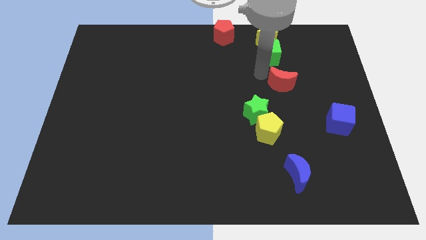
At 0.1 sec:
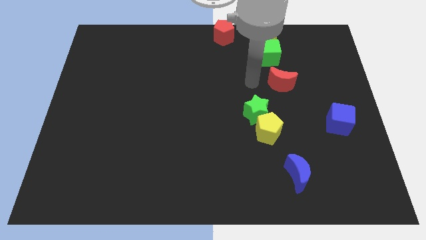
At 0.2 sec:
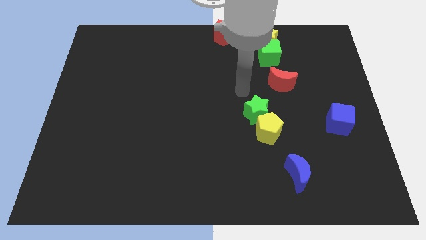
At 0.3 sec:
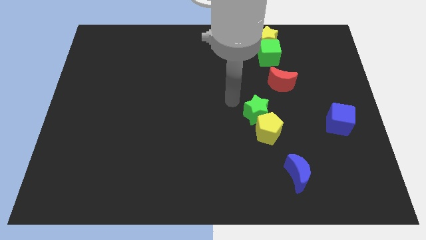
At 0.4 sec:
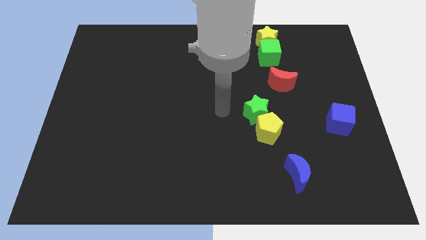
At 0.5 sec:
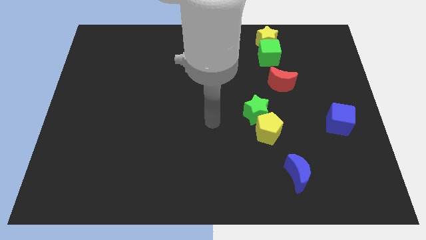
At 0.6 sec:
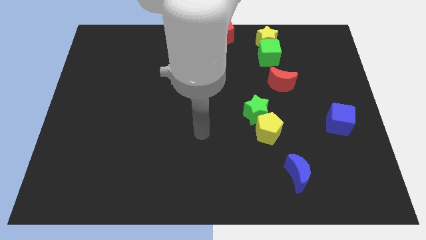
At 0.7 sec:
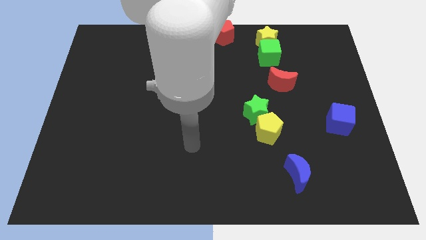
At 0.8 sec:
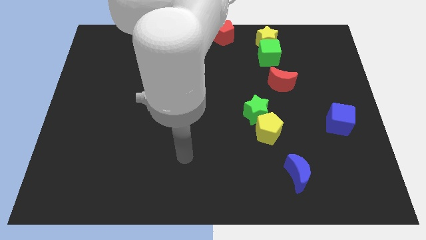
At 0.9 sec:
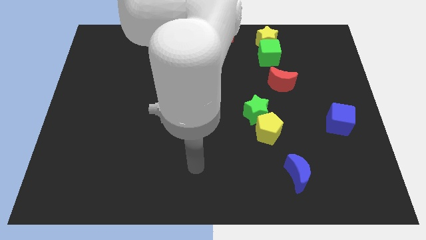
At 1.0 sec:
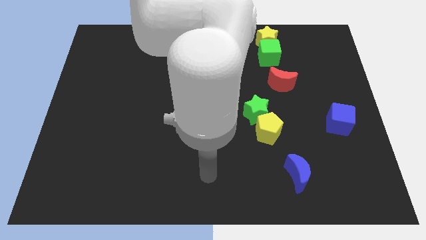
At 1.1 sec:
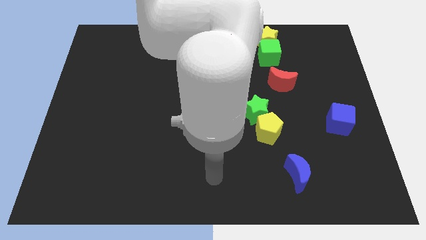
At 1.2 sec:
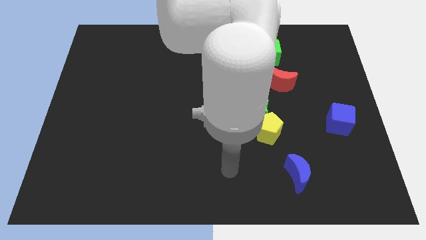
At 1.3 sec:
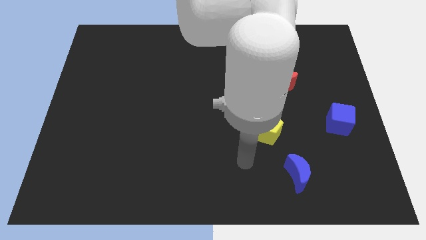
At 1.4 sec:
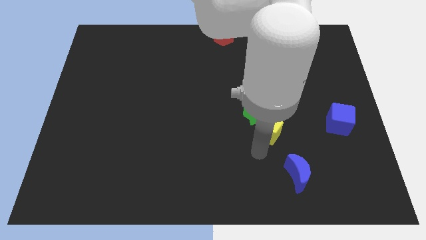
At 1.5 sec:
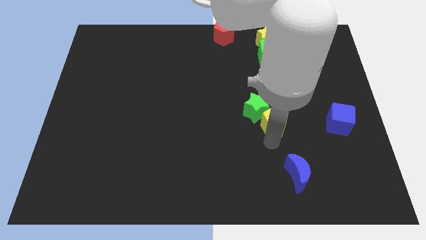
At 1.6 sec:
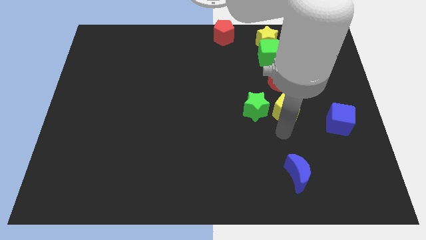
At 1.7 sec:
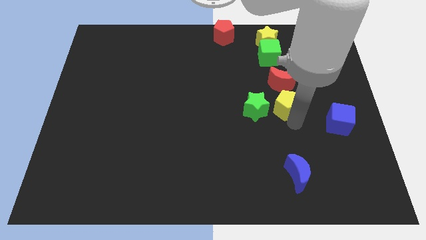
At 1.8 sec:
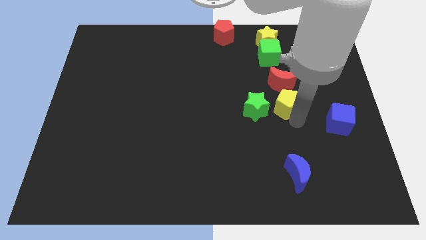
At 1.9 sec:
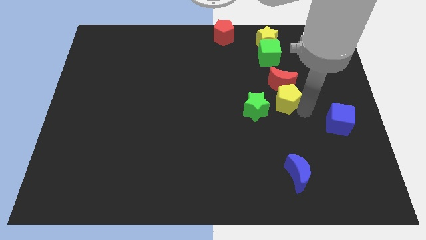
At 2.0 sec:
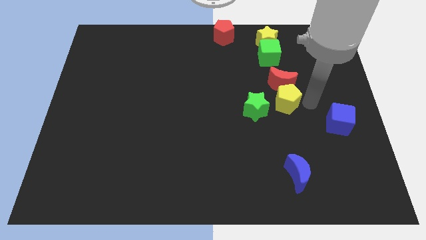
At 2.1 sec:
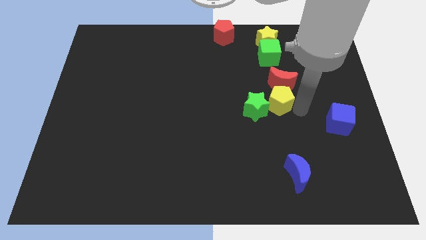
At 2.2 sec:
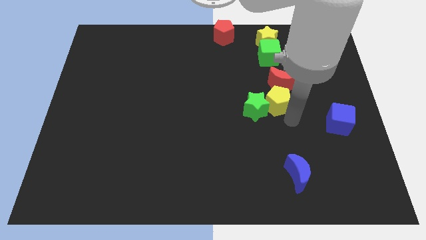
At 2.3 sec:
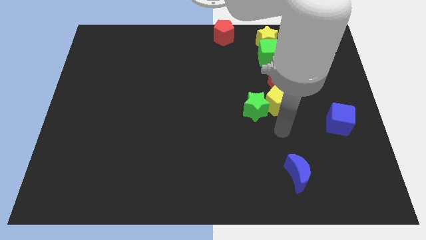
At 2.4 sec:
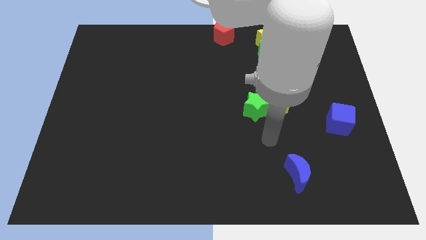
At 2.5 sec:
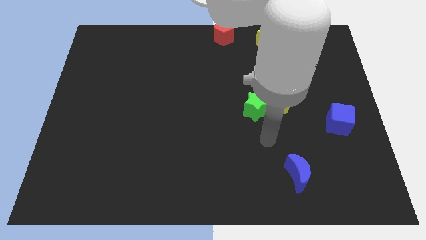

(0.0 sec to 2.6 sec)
place the yellow pentagon below the red crescent

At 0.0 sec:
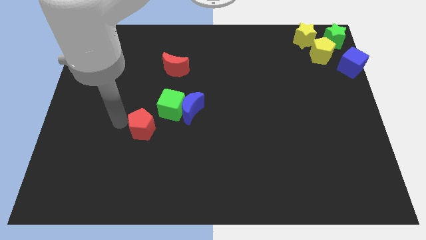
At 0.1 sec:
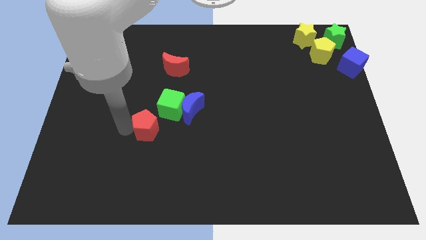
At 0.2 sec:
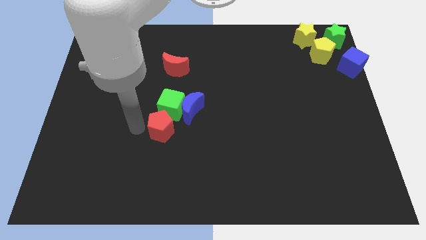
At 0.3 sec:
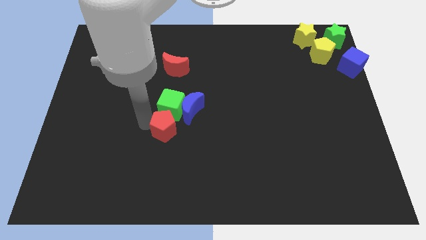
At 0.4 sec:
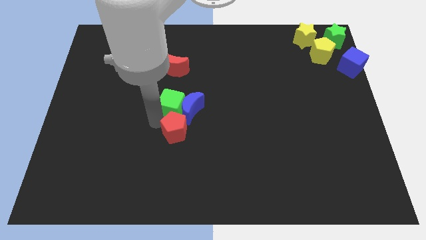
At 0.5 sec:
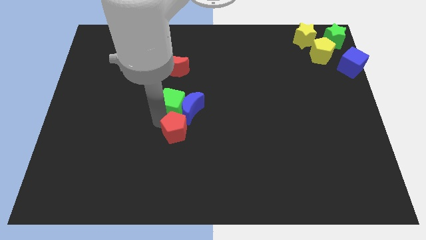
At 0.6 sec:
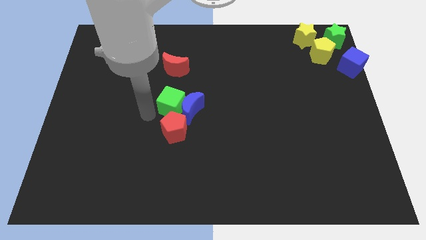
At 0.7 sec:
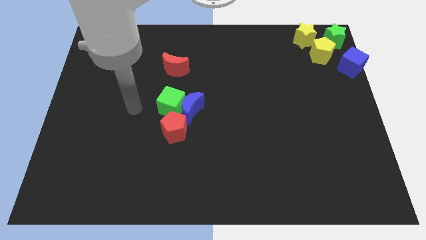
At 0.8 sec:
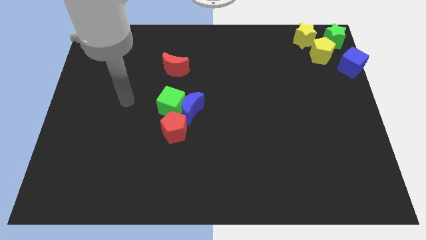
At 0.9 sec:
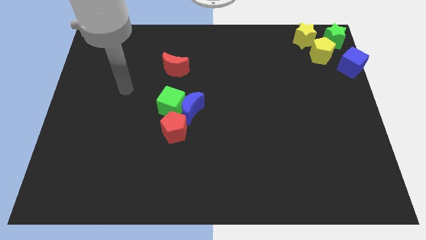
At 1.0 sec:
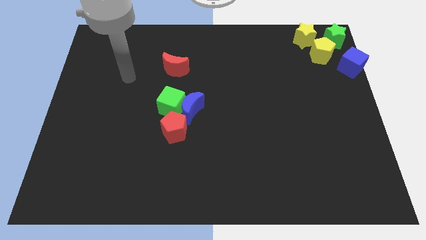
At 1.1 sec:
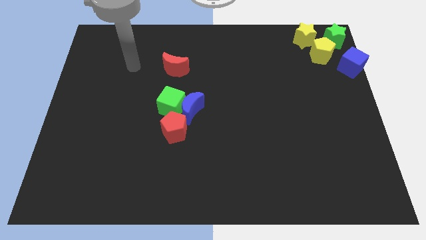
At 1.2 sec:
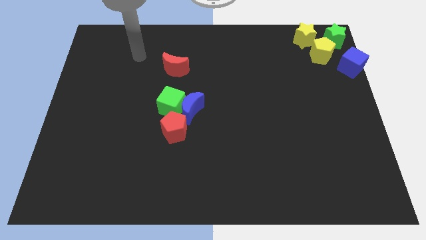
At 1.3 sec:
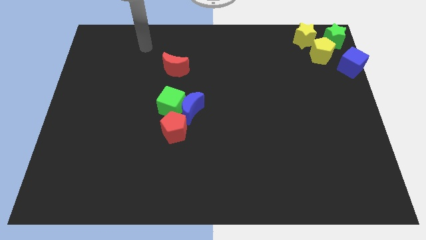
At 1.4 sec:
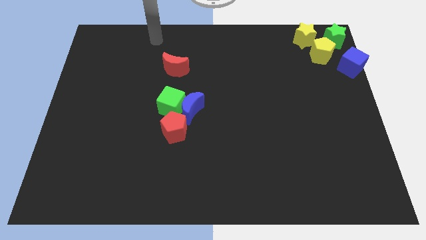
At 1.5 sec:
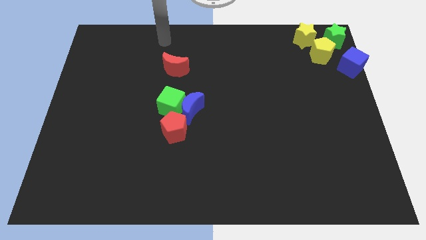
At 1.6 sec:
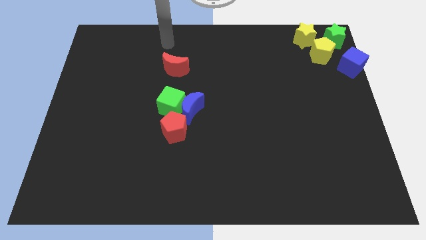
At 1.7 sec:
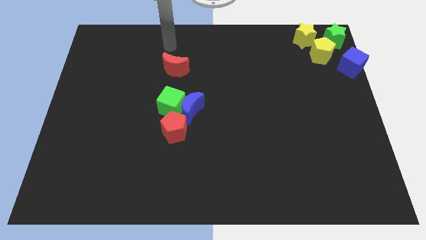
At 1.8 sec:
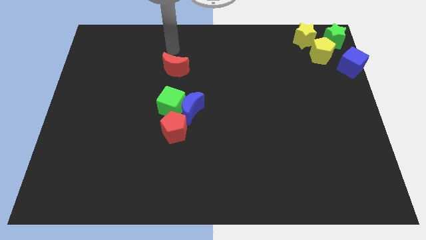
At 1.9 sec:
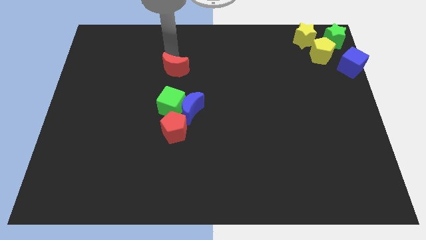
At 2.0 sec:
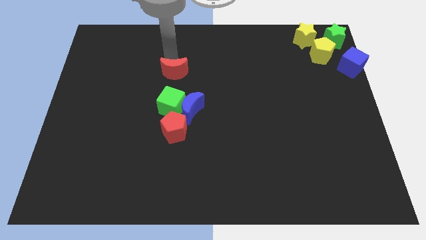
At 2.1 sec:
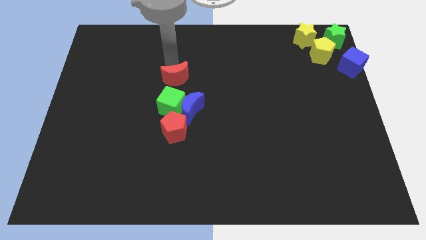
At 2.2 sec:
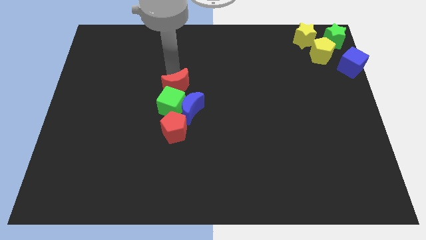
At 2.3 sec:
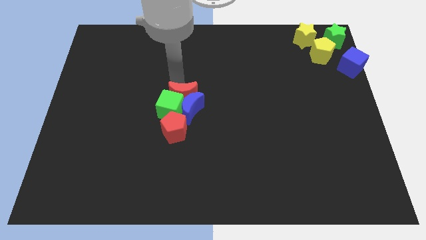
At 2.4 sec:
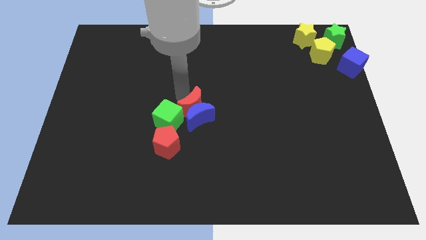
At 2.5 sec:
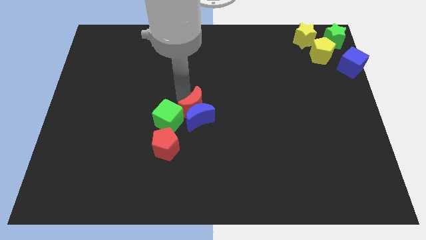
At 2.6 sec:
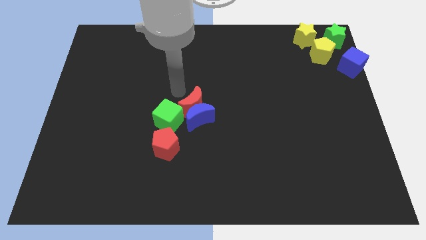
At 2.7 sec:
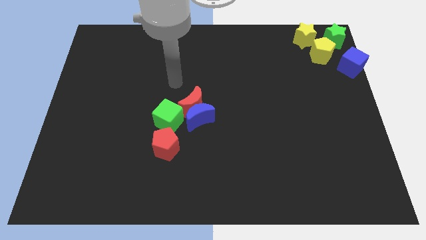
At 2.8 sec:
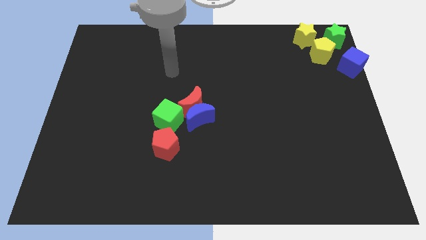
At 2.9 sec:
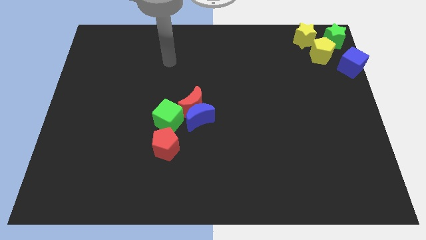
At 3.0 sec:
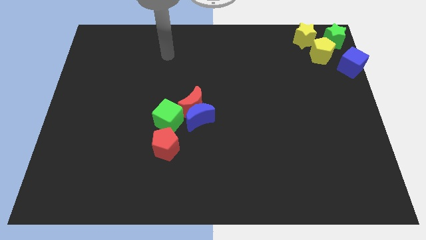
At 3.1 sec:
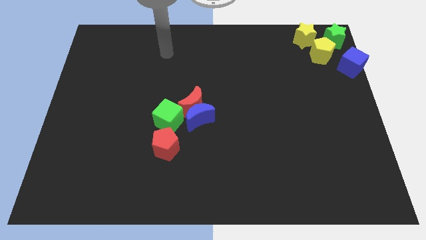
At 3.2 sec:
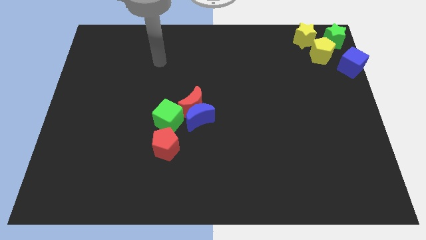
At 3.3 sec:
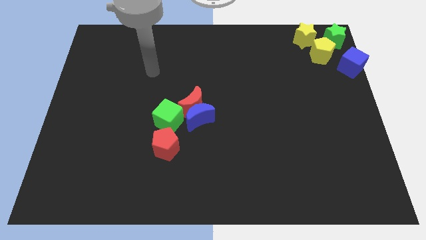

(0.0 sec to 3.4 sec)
push the red crescent into blue crescent

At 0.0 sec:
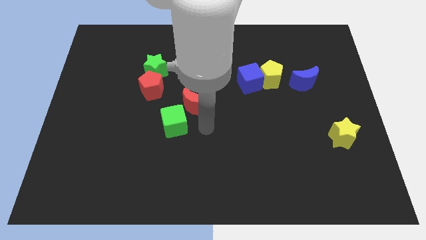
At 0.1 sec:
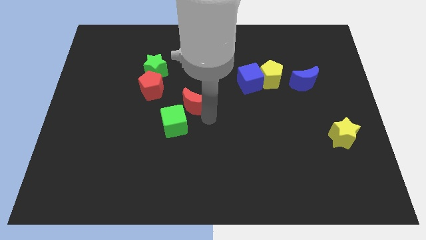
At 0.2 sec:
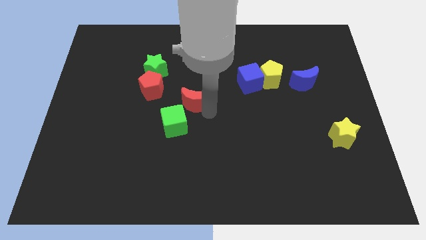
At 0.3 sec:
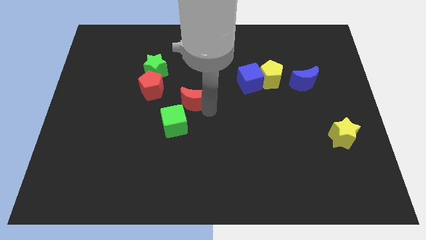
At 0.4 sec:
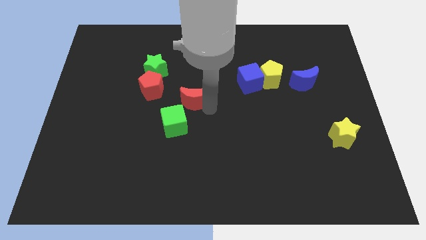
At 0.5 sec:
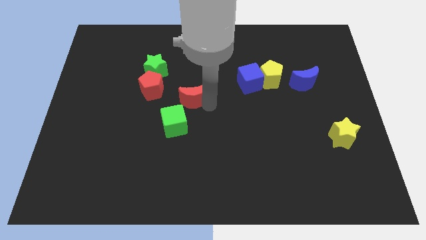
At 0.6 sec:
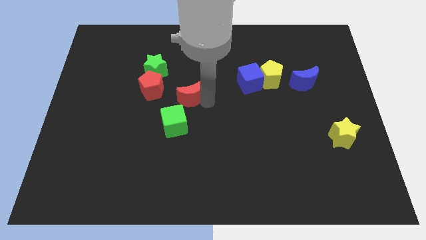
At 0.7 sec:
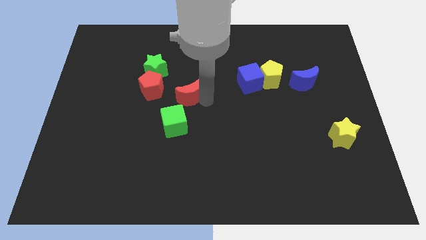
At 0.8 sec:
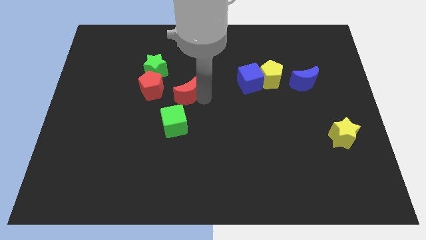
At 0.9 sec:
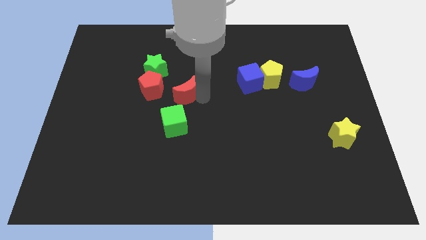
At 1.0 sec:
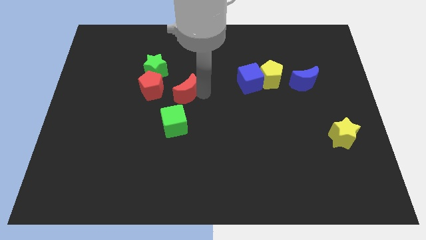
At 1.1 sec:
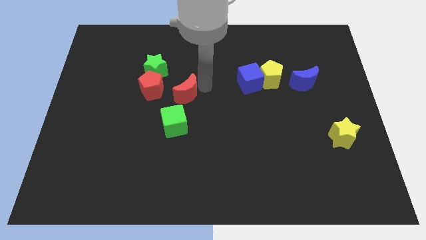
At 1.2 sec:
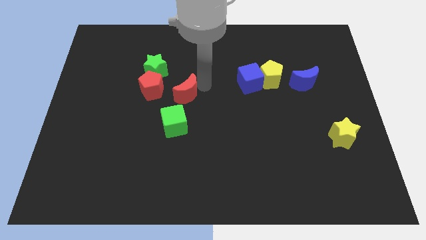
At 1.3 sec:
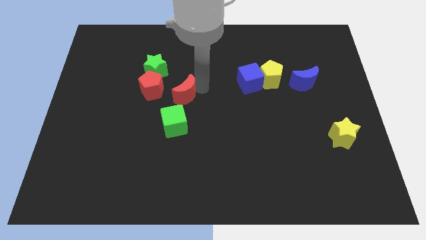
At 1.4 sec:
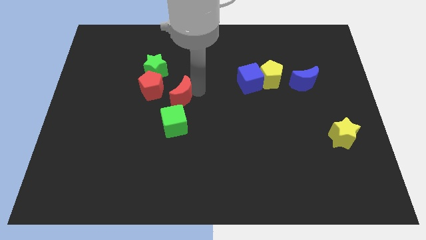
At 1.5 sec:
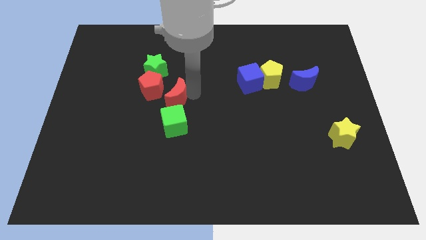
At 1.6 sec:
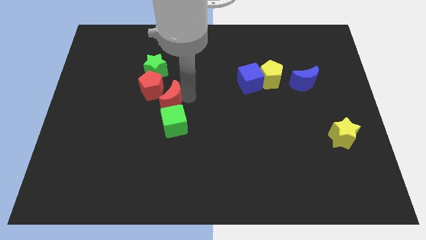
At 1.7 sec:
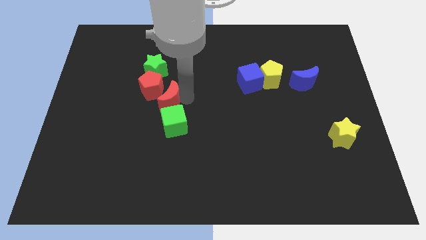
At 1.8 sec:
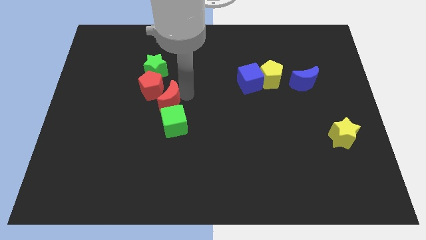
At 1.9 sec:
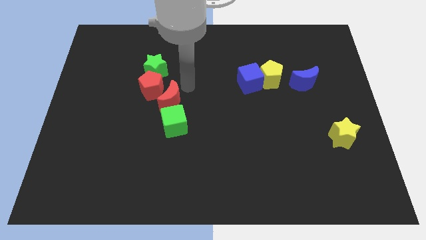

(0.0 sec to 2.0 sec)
place red moon between red pentagon and green cube

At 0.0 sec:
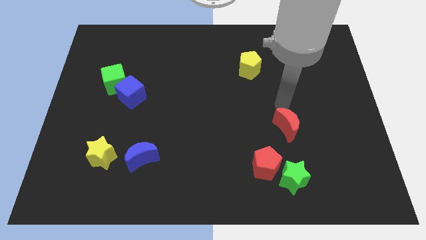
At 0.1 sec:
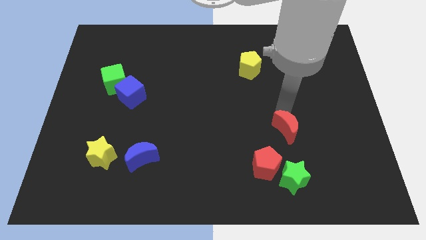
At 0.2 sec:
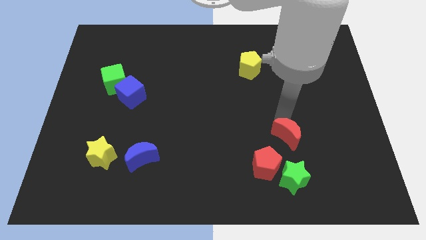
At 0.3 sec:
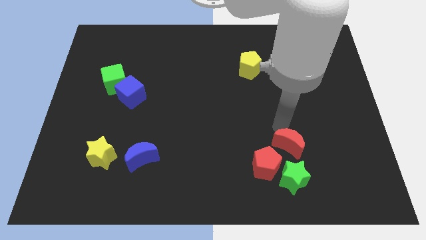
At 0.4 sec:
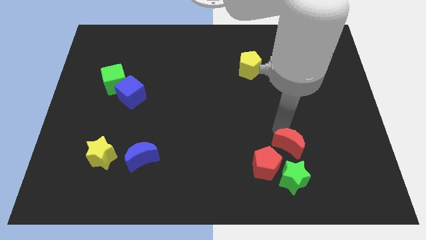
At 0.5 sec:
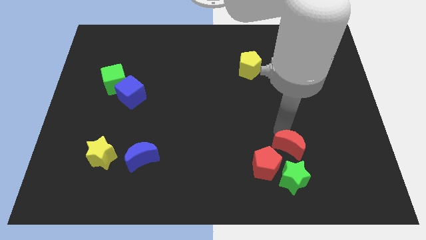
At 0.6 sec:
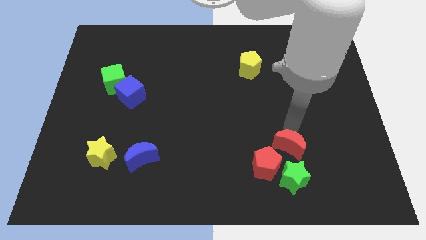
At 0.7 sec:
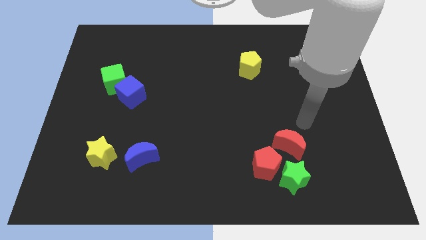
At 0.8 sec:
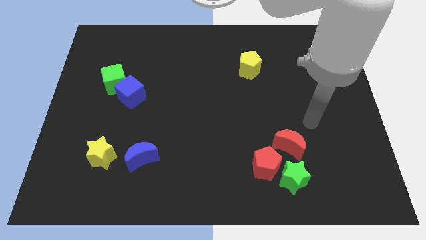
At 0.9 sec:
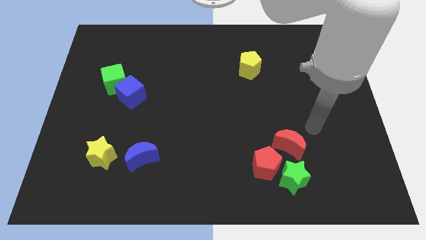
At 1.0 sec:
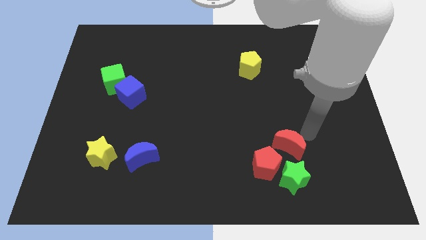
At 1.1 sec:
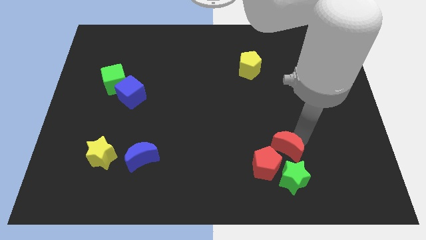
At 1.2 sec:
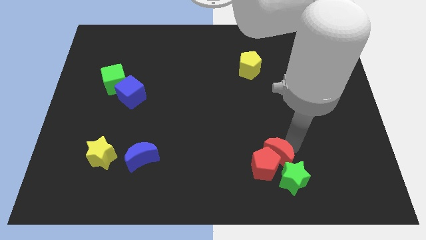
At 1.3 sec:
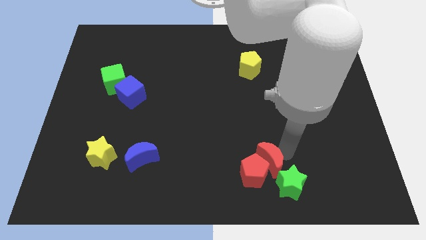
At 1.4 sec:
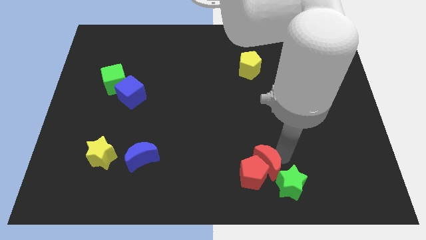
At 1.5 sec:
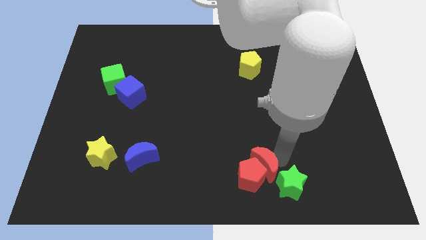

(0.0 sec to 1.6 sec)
push the red moon into the red pentagon
